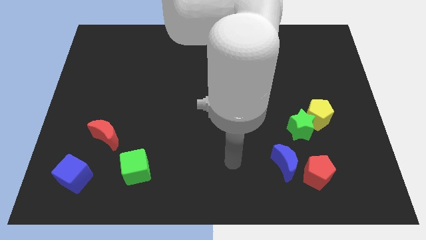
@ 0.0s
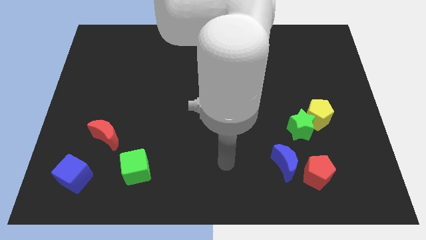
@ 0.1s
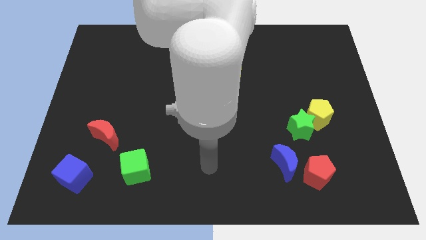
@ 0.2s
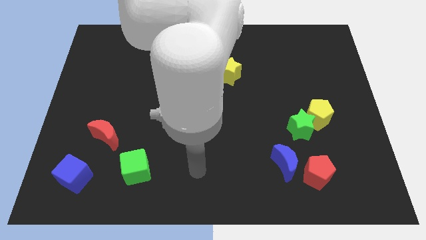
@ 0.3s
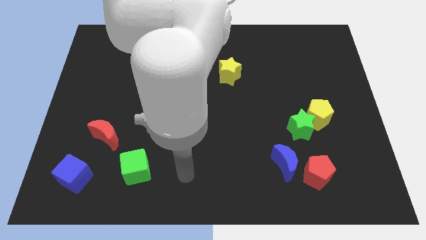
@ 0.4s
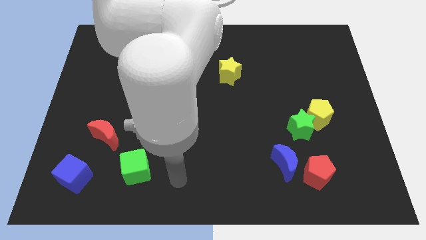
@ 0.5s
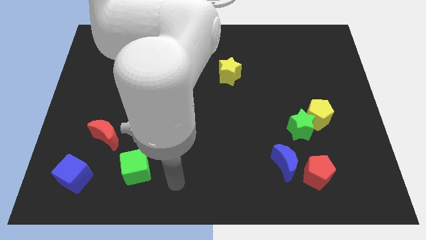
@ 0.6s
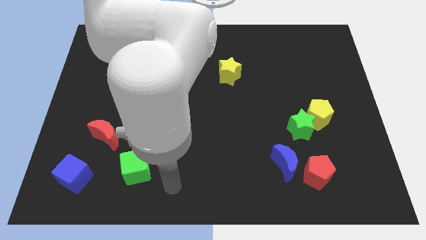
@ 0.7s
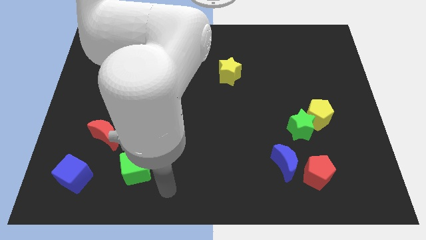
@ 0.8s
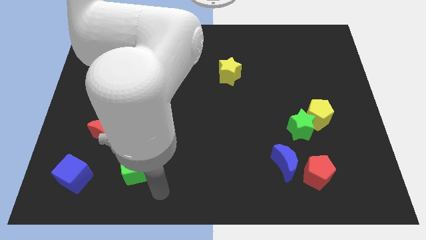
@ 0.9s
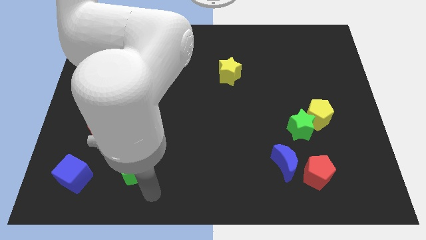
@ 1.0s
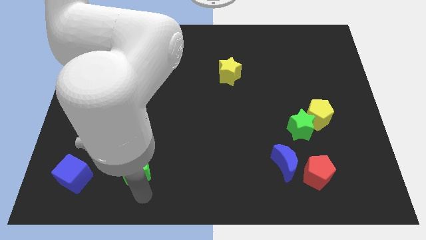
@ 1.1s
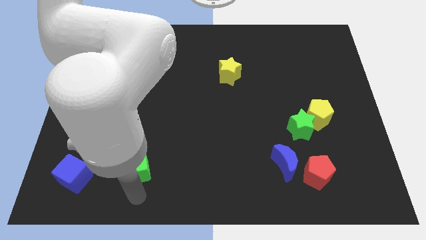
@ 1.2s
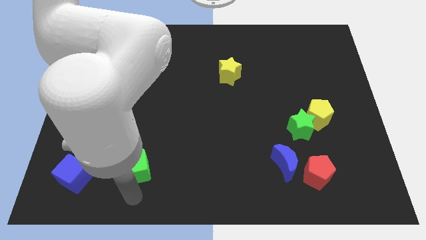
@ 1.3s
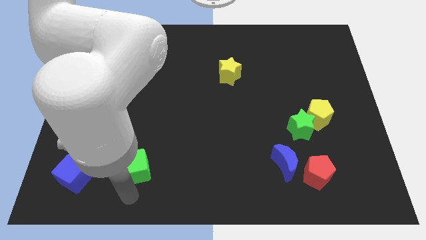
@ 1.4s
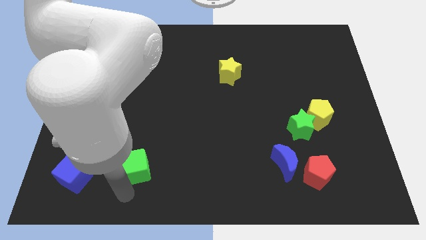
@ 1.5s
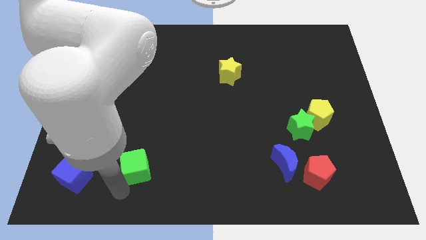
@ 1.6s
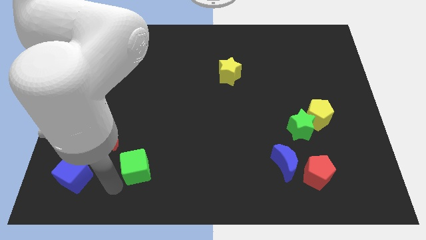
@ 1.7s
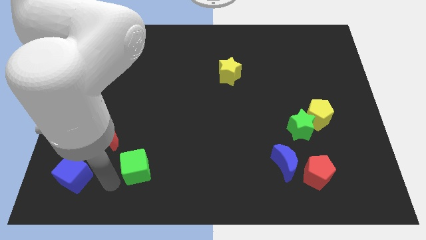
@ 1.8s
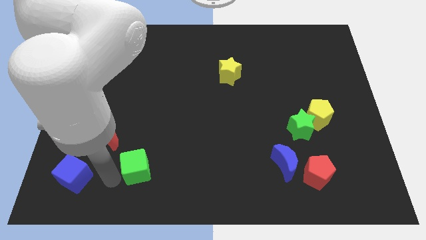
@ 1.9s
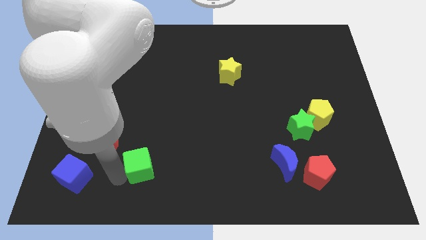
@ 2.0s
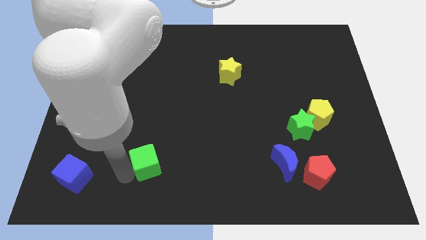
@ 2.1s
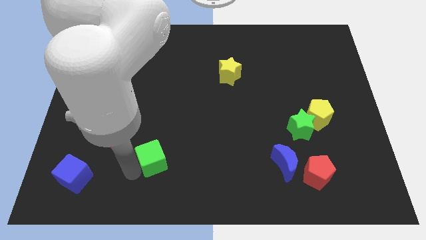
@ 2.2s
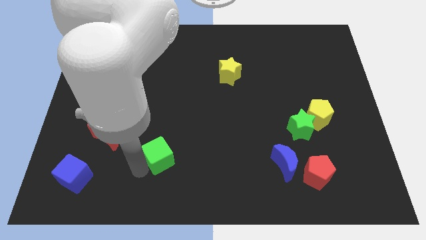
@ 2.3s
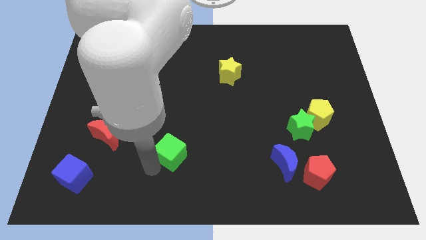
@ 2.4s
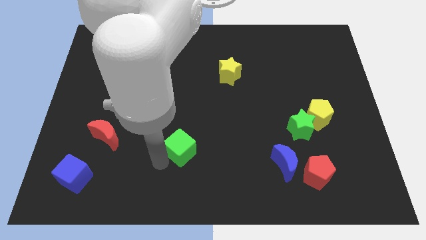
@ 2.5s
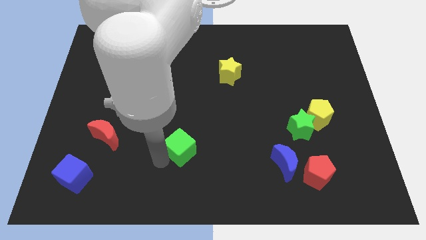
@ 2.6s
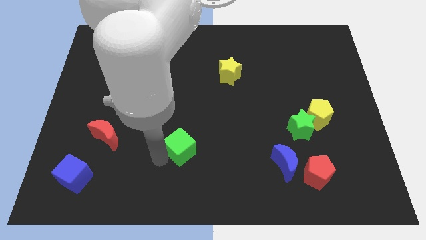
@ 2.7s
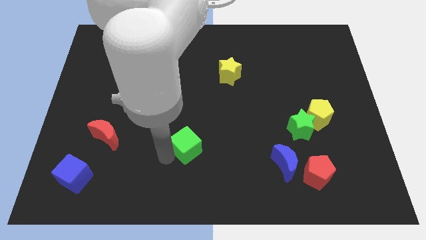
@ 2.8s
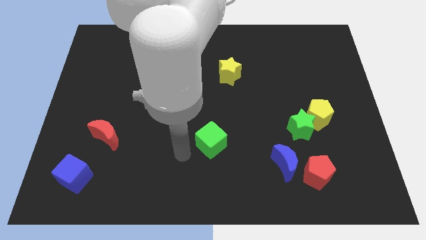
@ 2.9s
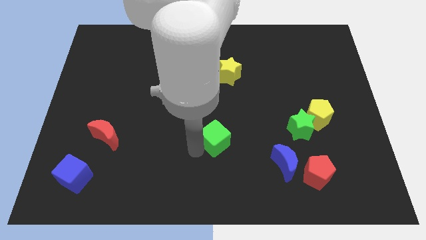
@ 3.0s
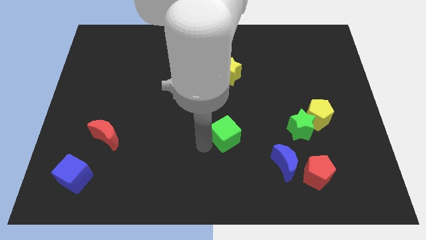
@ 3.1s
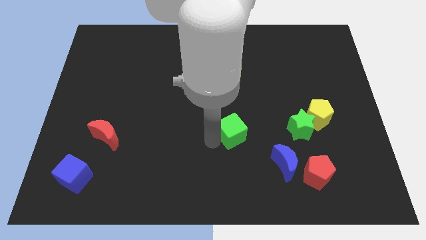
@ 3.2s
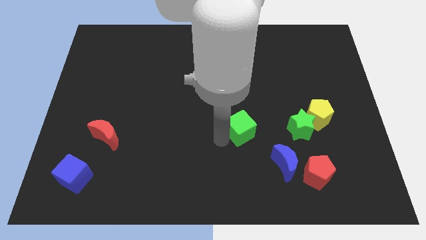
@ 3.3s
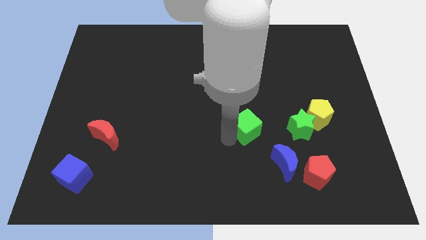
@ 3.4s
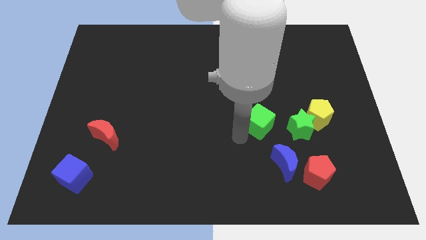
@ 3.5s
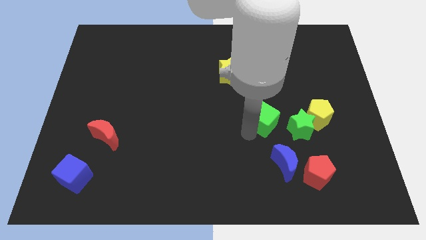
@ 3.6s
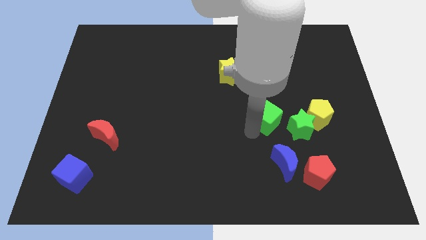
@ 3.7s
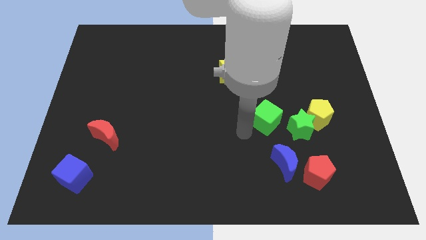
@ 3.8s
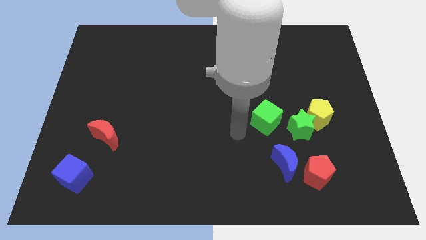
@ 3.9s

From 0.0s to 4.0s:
push green cube to the left of green star

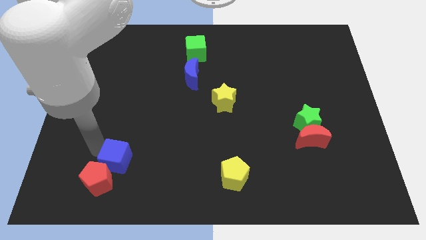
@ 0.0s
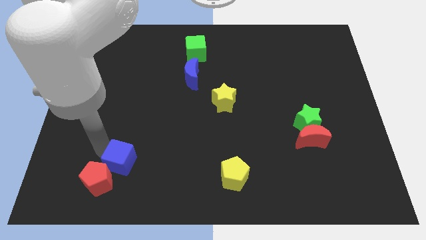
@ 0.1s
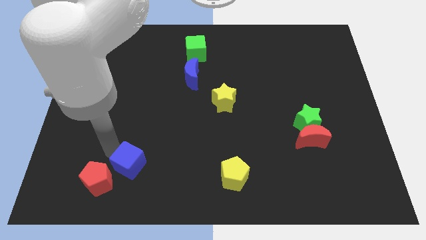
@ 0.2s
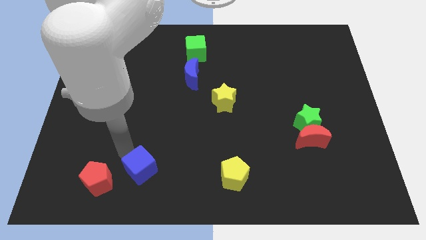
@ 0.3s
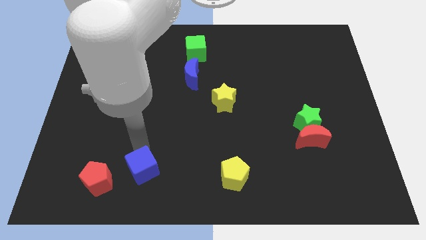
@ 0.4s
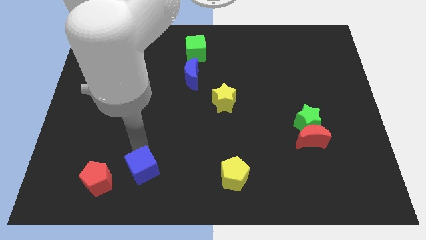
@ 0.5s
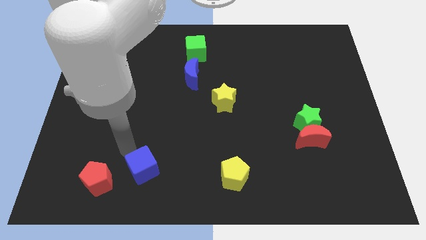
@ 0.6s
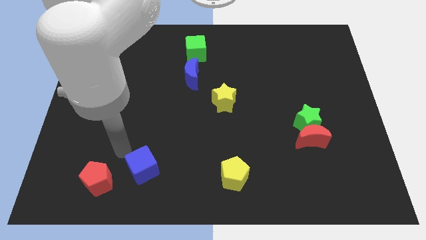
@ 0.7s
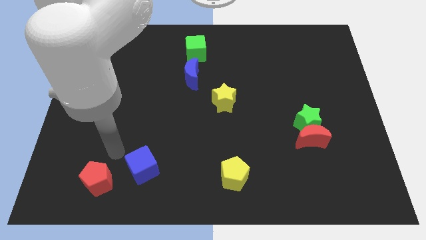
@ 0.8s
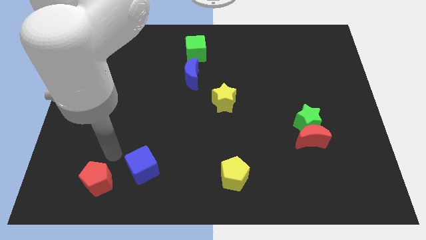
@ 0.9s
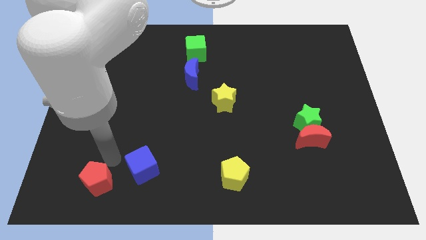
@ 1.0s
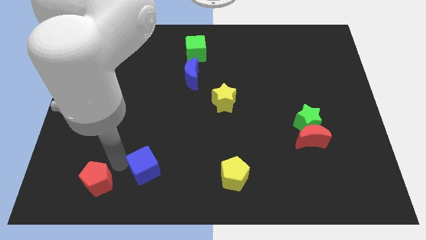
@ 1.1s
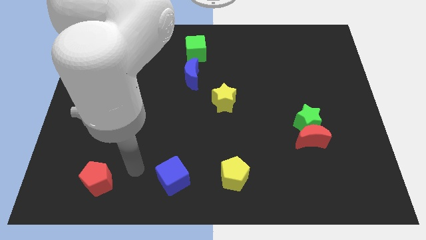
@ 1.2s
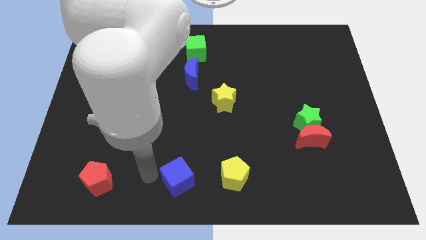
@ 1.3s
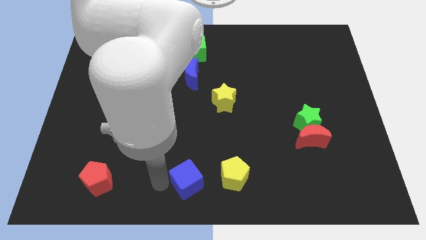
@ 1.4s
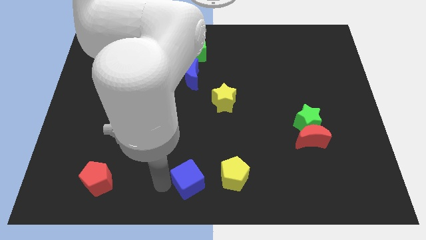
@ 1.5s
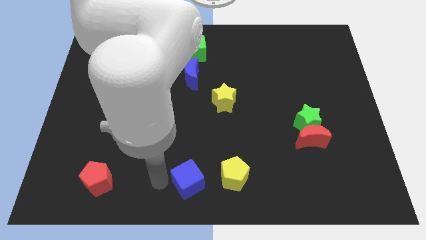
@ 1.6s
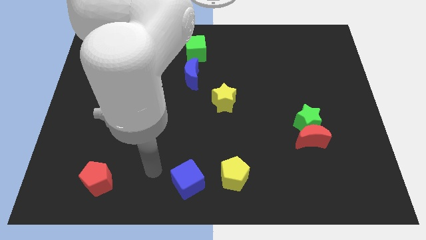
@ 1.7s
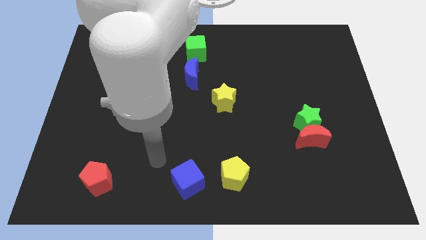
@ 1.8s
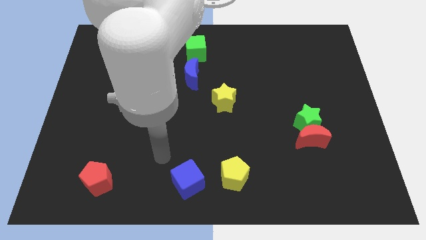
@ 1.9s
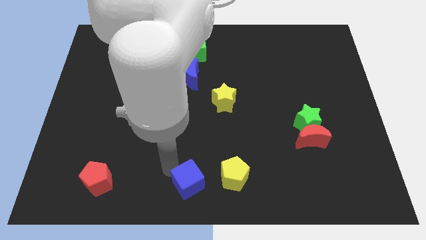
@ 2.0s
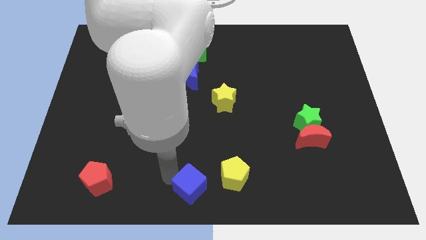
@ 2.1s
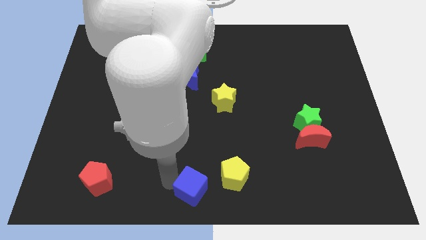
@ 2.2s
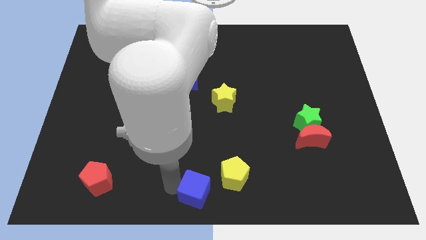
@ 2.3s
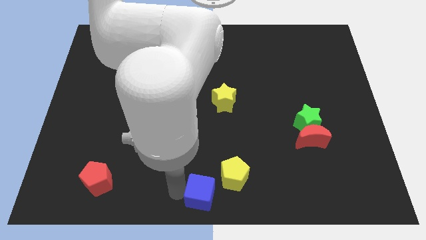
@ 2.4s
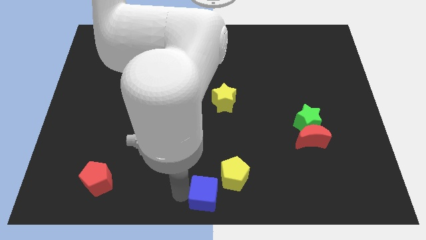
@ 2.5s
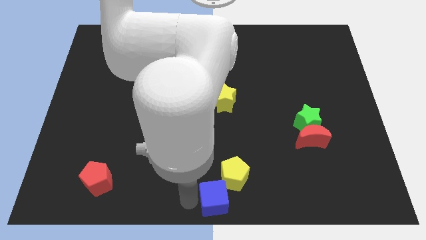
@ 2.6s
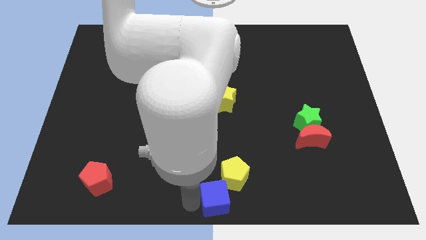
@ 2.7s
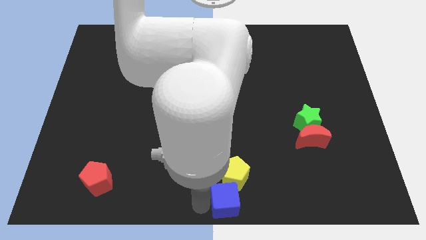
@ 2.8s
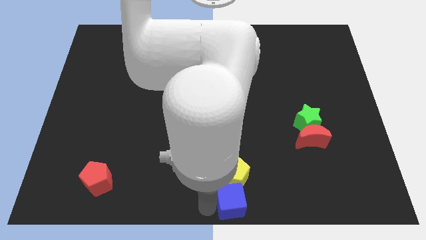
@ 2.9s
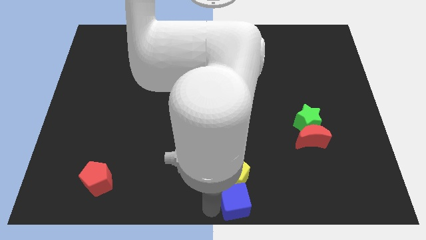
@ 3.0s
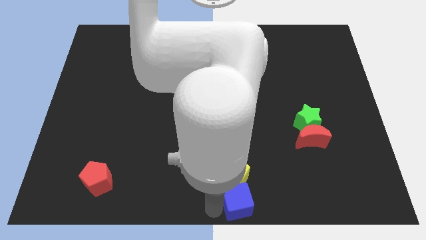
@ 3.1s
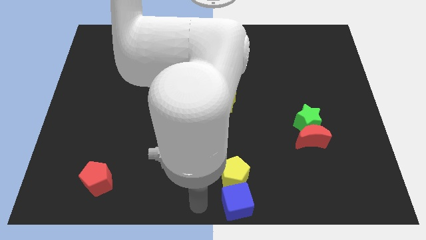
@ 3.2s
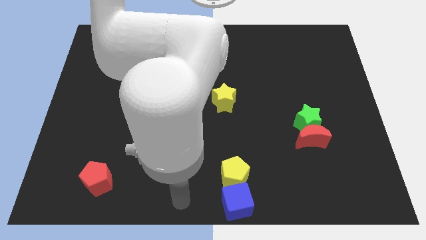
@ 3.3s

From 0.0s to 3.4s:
place the blue cube below the yellow pentagon

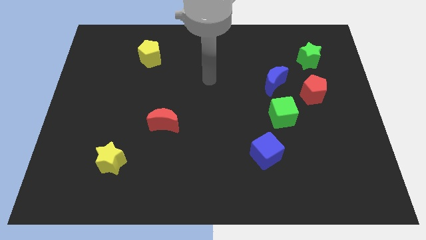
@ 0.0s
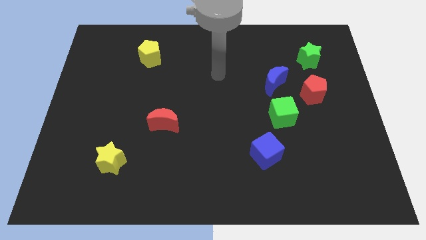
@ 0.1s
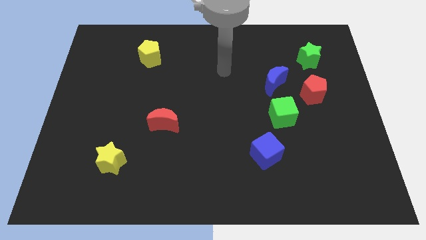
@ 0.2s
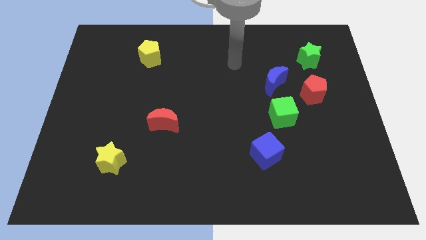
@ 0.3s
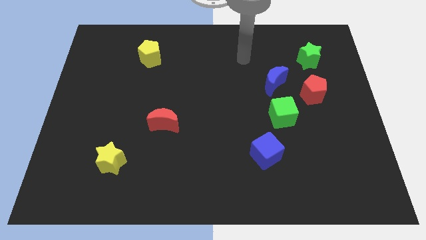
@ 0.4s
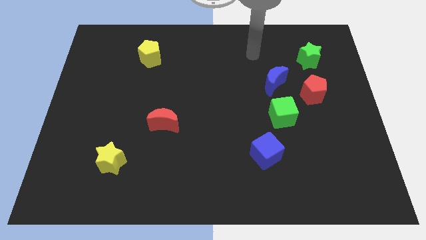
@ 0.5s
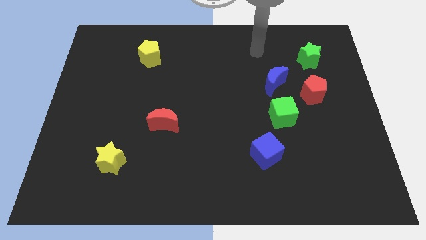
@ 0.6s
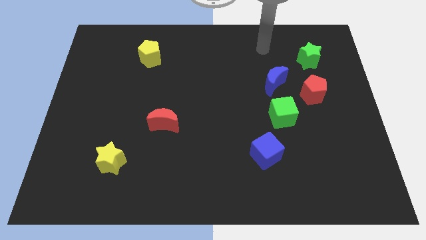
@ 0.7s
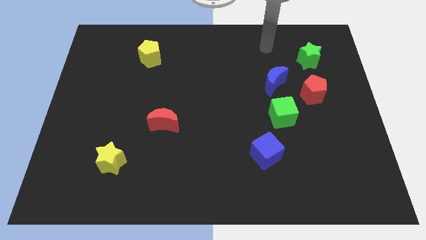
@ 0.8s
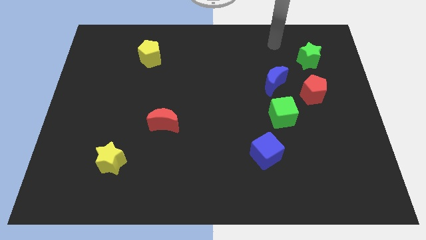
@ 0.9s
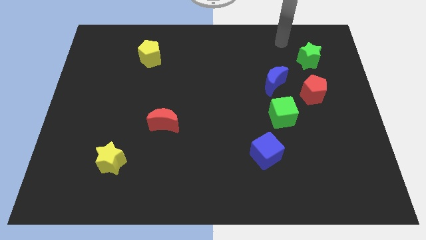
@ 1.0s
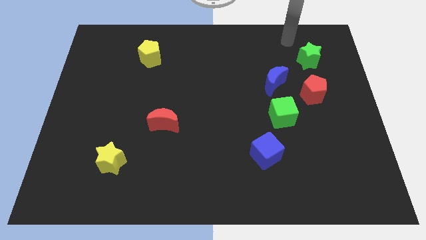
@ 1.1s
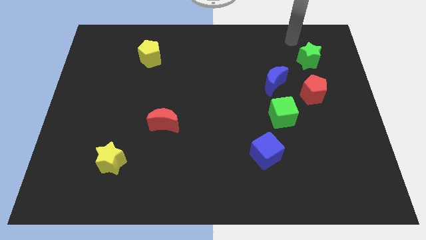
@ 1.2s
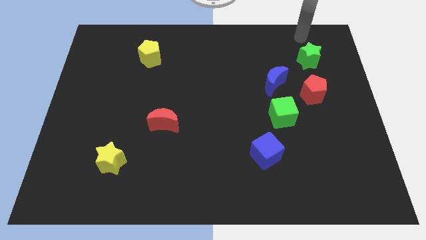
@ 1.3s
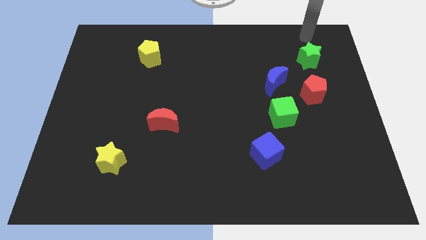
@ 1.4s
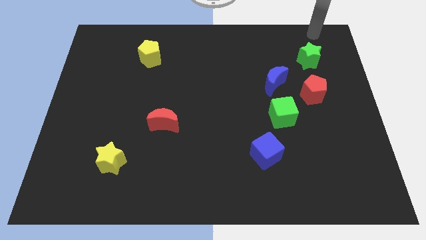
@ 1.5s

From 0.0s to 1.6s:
move your arm on top of the green star
